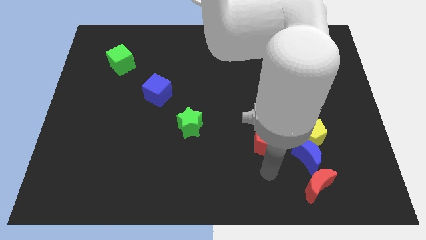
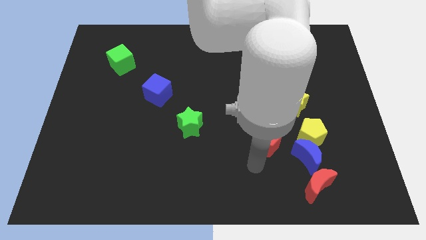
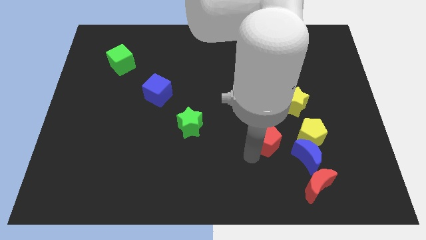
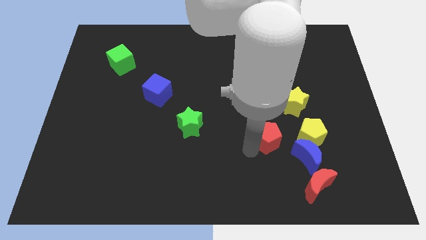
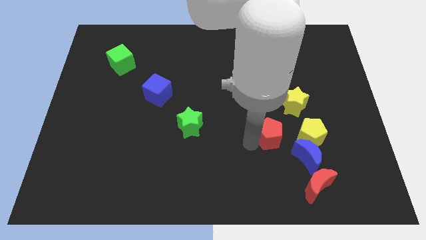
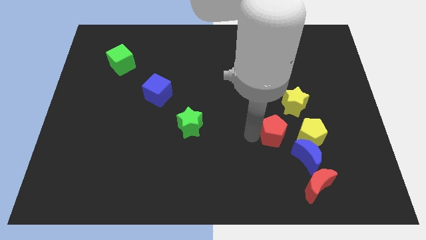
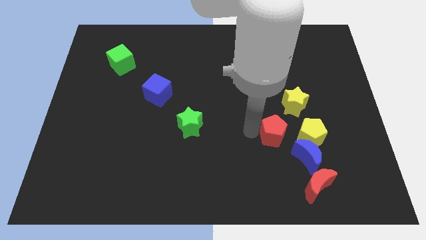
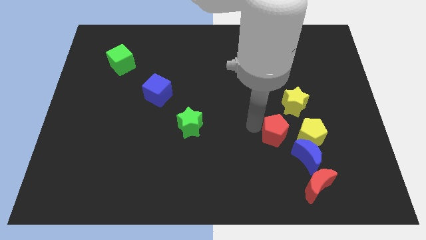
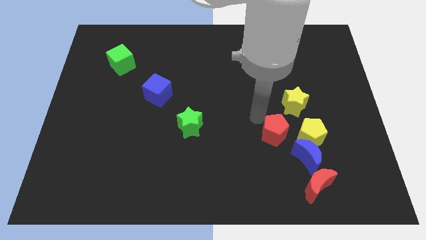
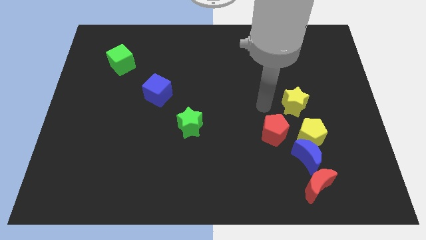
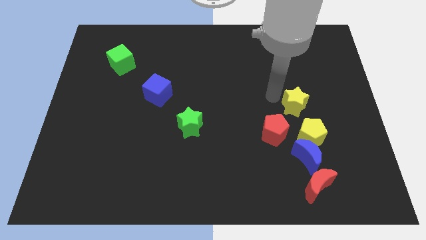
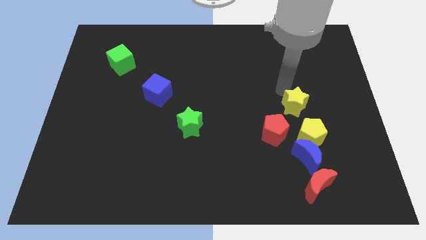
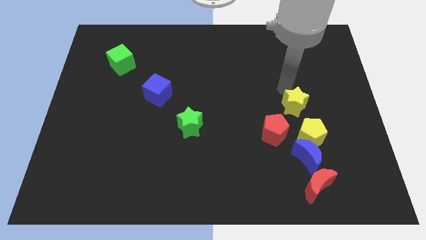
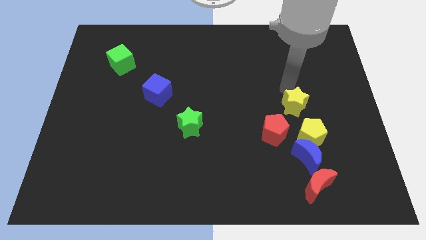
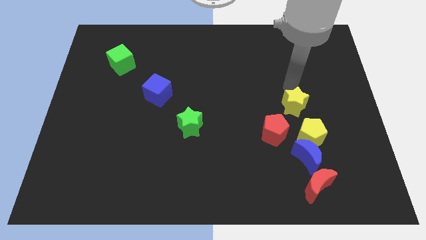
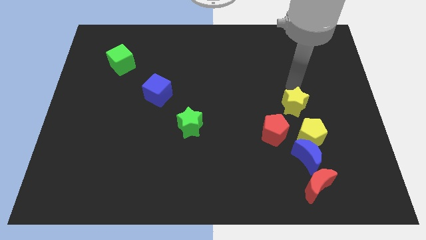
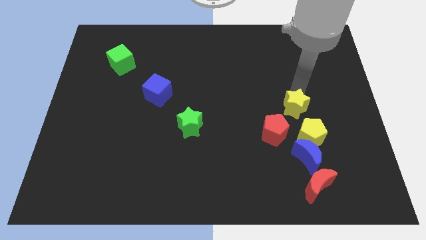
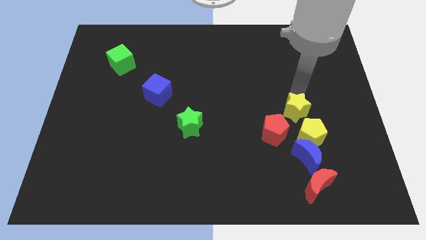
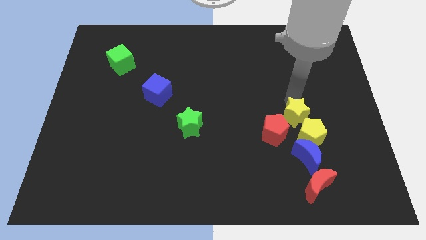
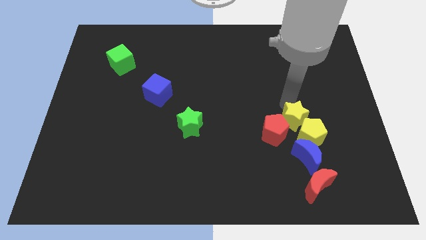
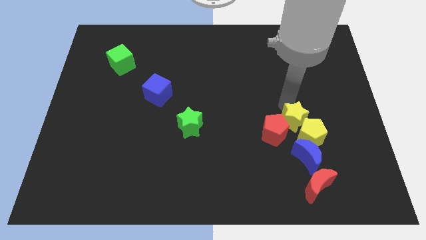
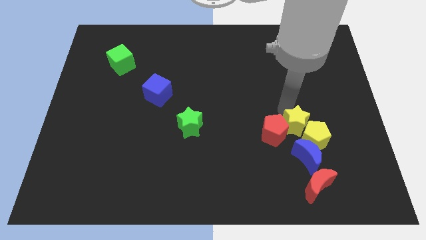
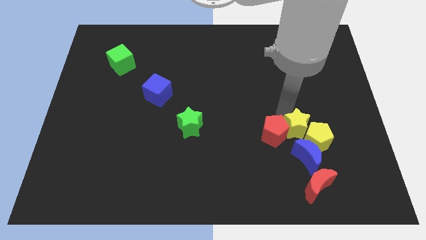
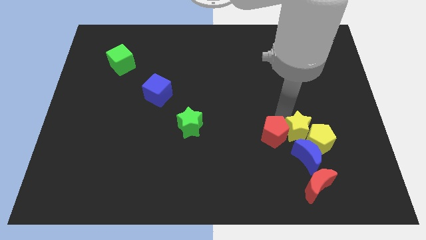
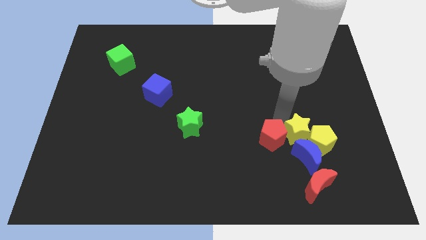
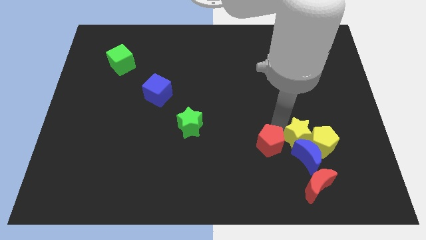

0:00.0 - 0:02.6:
go and push the yellow star into the top of the blue crescent

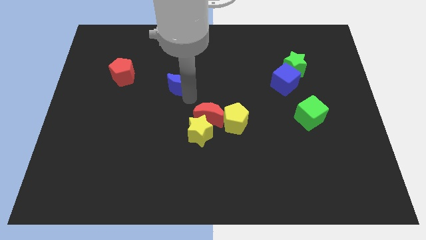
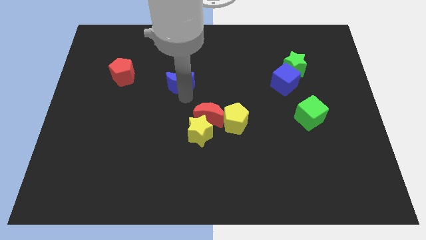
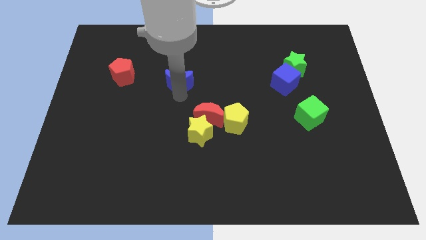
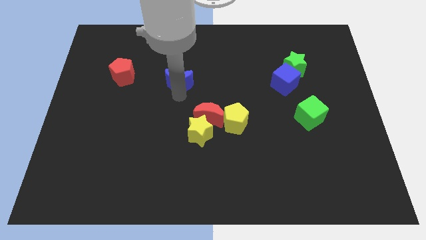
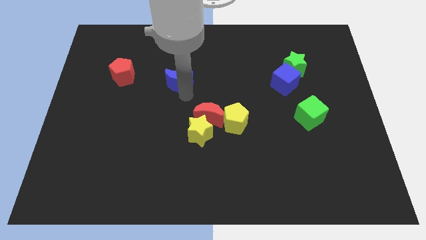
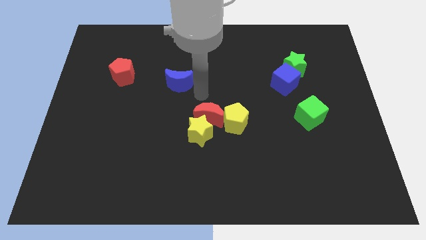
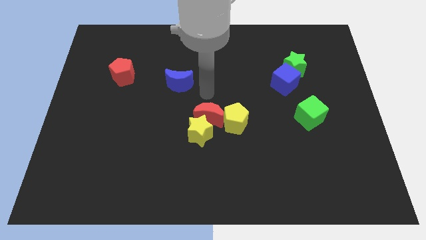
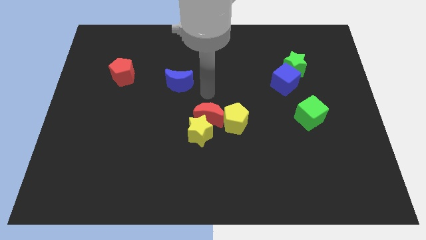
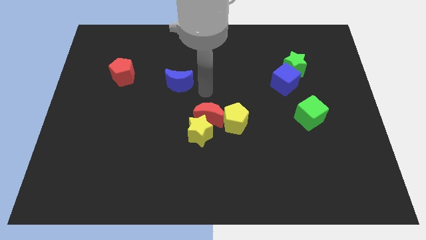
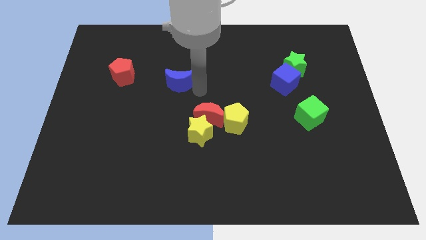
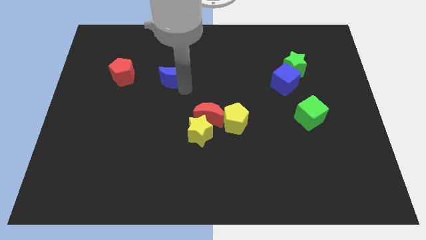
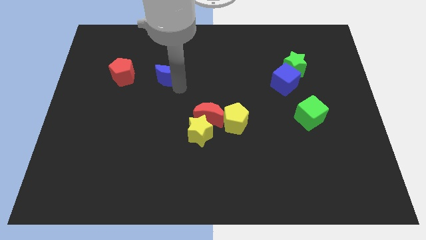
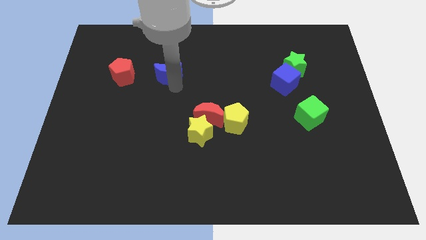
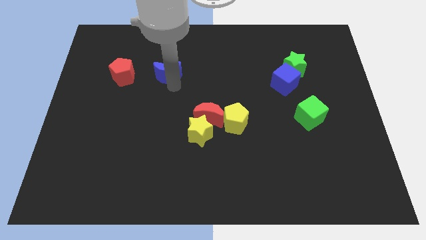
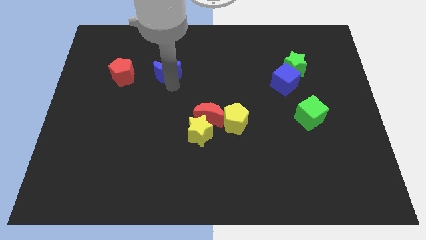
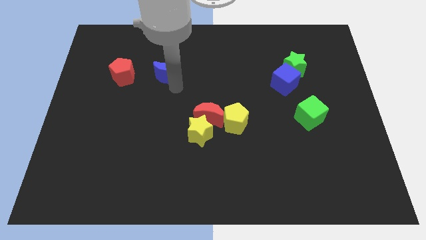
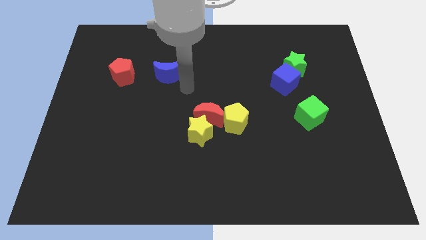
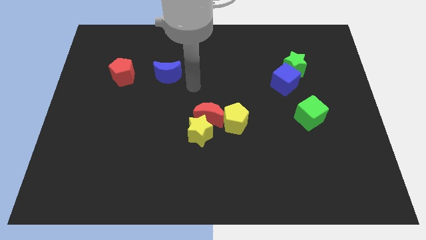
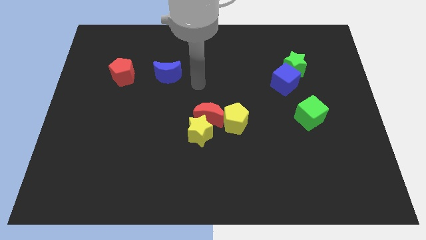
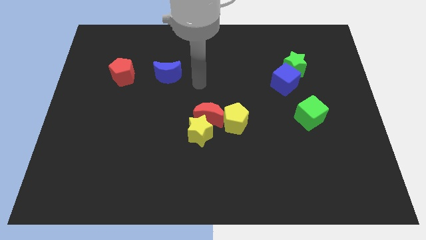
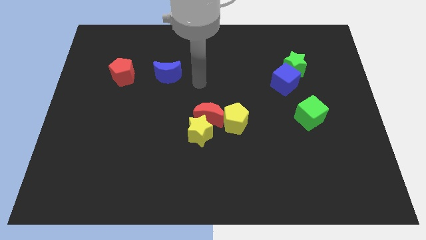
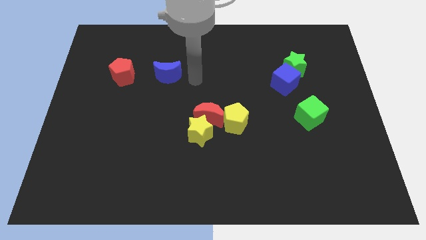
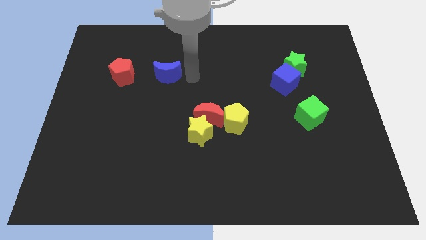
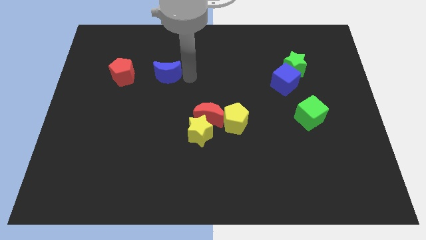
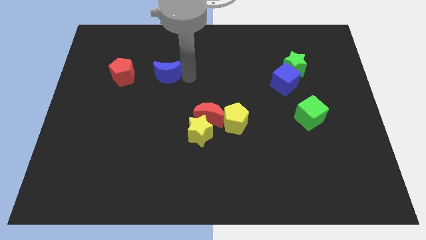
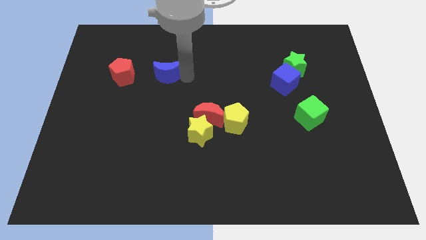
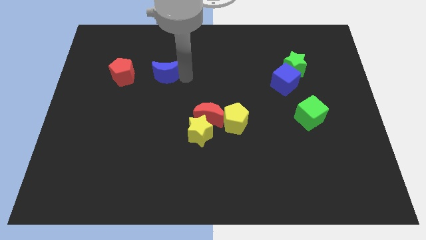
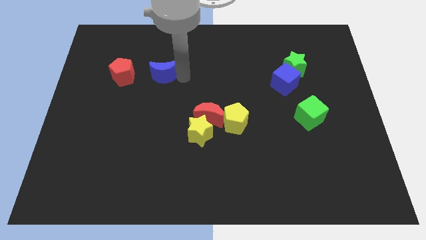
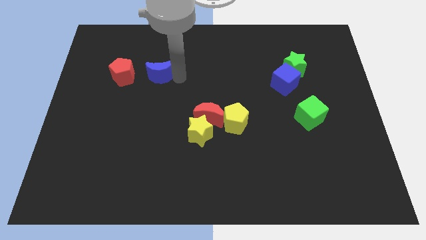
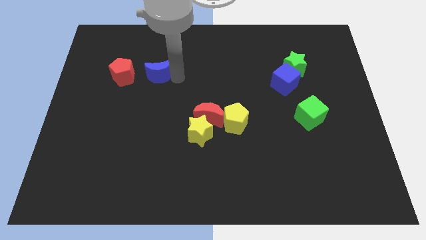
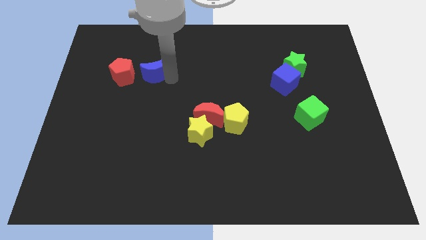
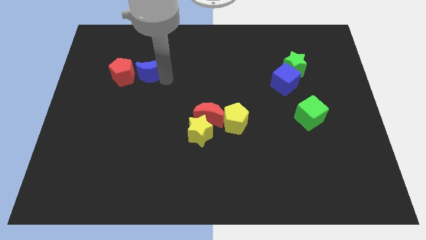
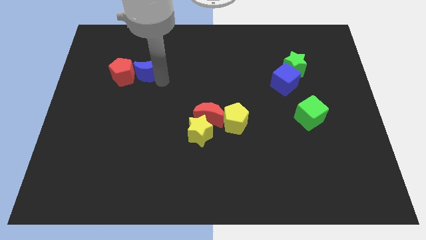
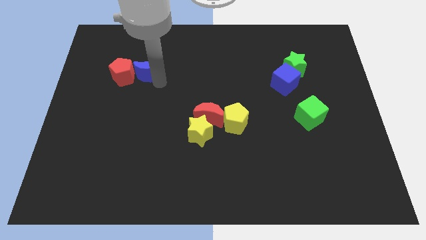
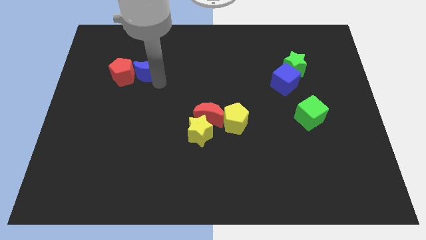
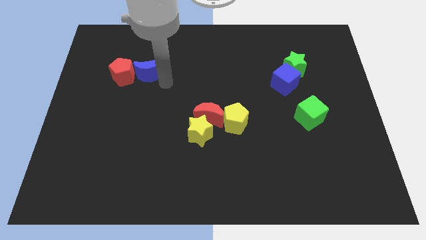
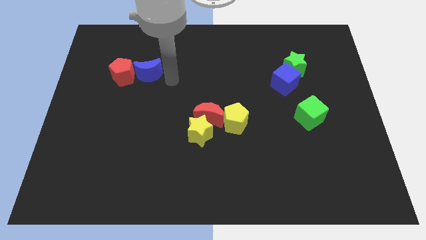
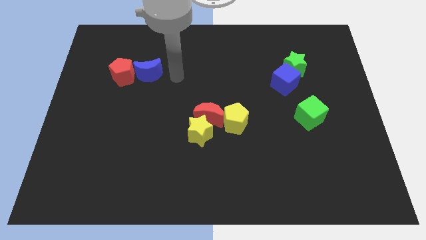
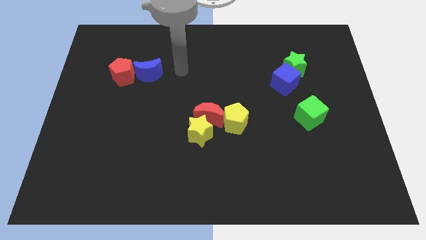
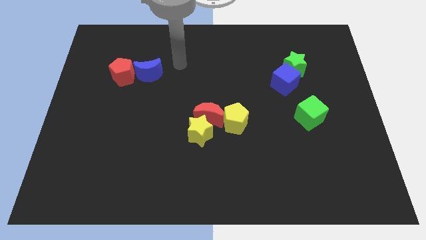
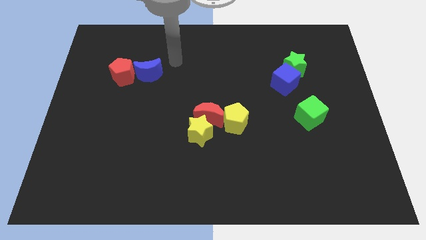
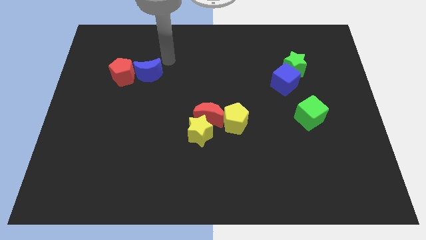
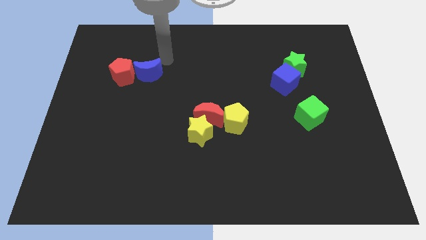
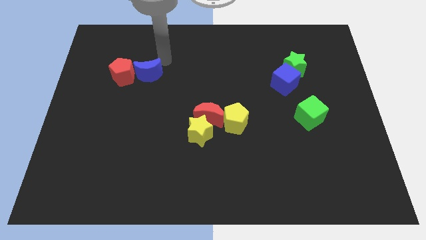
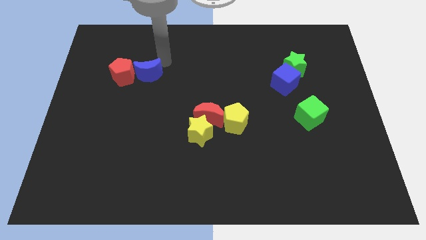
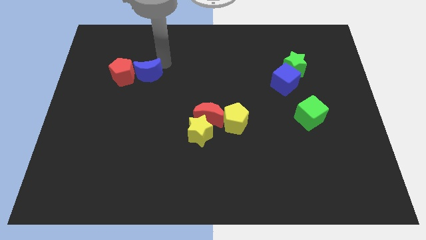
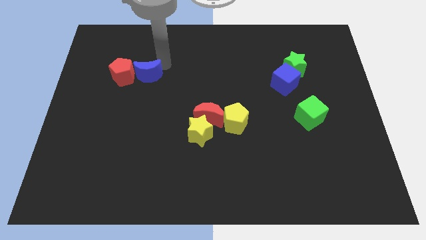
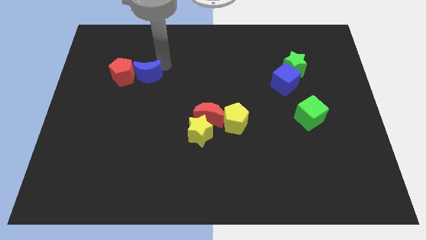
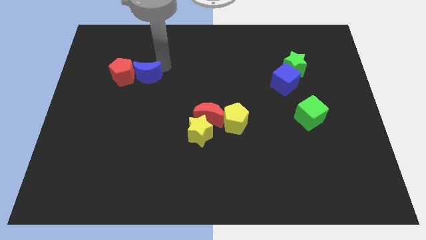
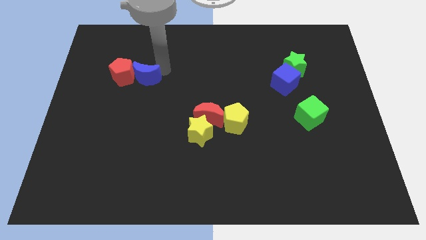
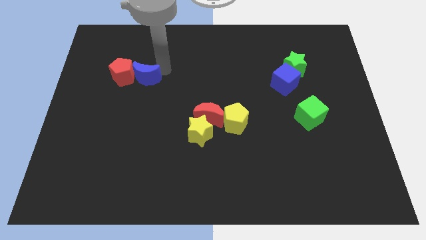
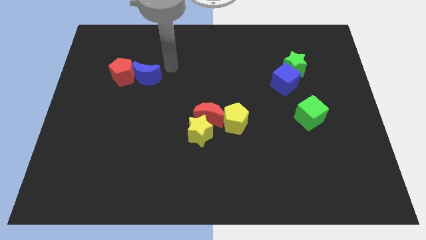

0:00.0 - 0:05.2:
put the blue moon to the right side of the red pentagon

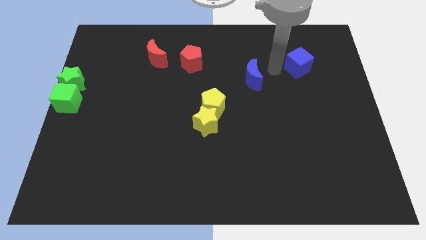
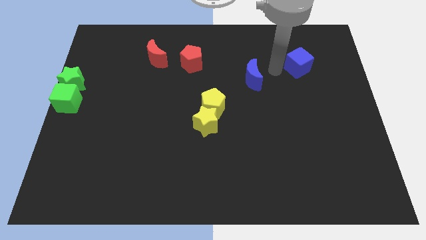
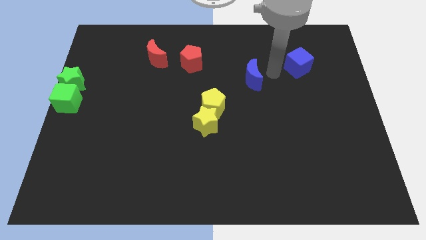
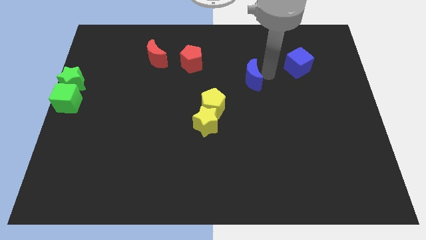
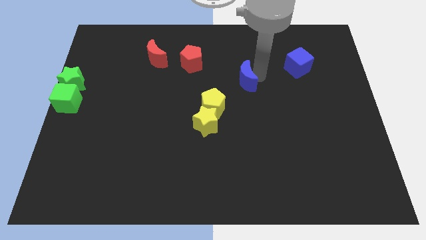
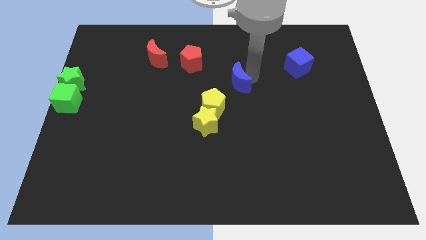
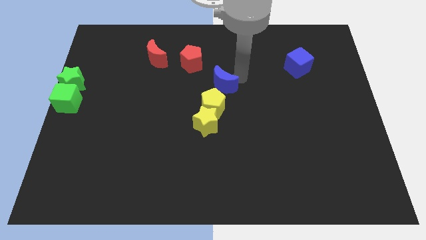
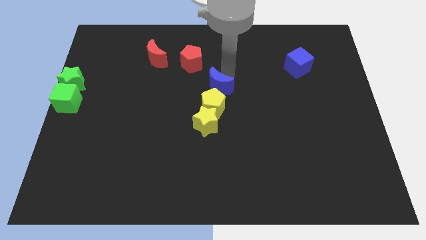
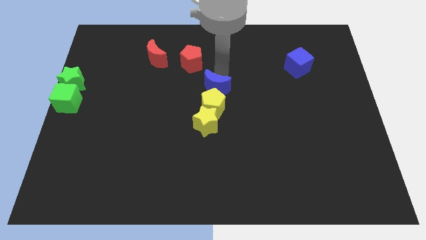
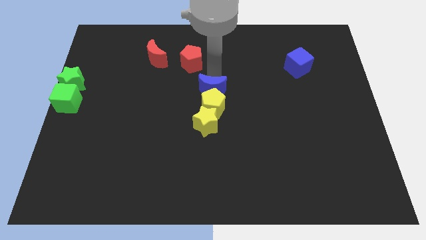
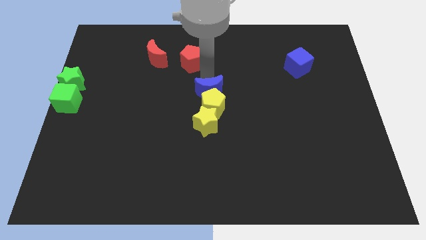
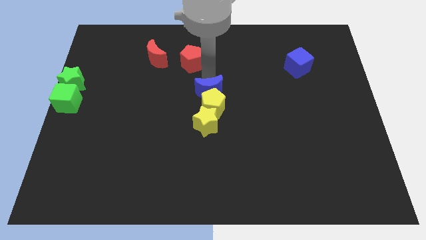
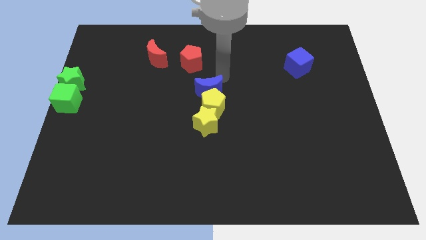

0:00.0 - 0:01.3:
place blue moon above the yellow pentagon
